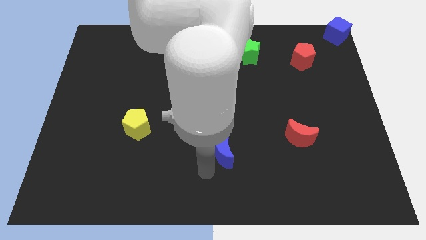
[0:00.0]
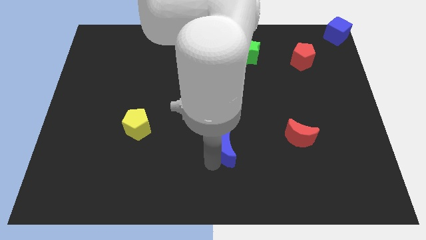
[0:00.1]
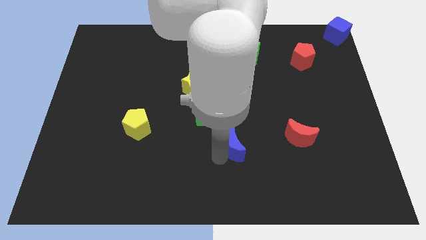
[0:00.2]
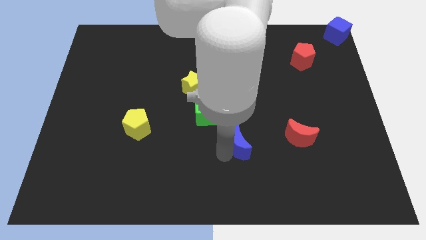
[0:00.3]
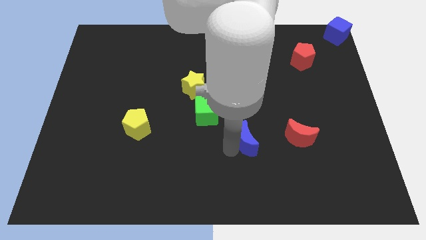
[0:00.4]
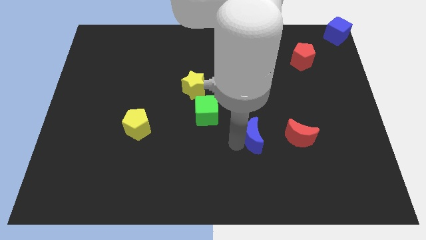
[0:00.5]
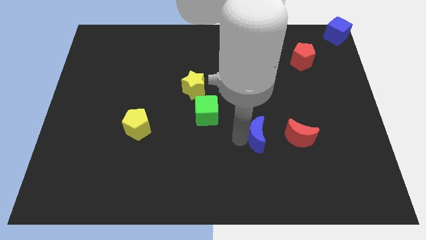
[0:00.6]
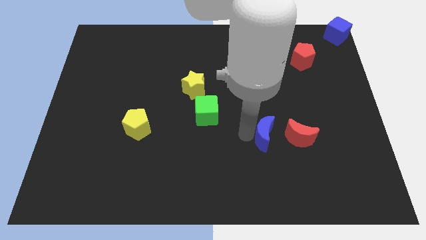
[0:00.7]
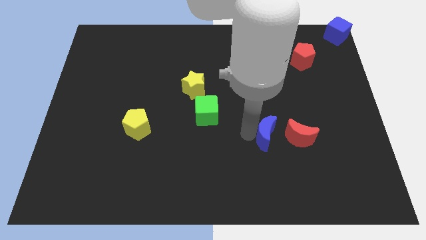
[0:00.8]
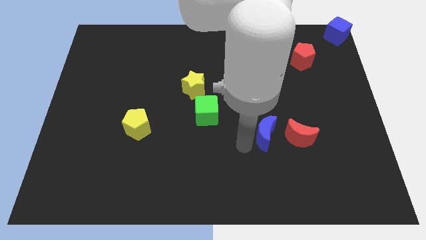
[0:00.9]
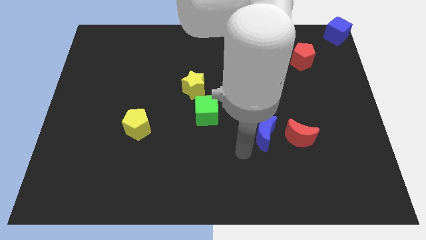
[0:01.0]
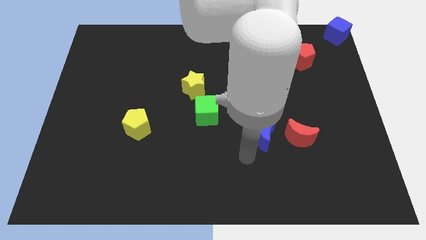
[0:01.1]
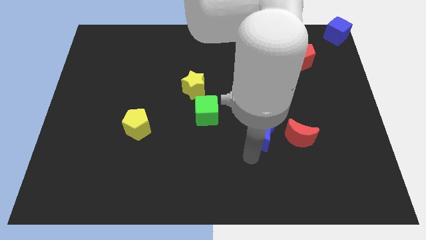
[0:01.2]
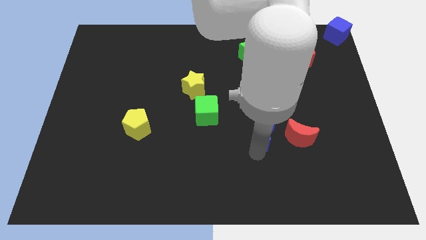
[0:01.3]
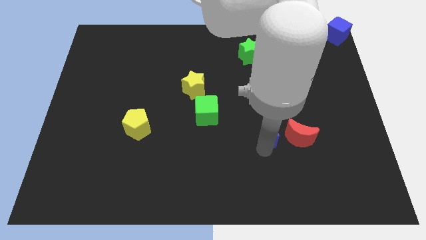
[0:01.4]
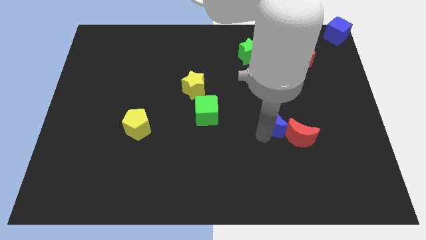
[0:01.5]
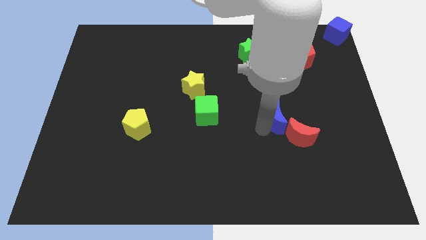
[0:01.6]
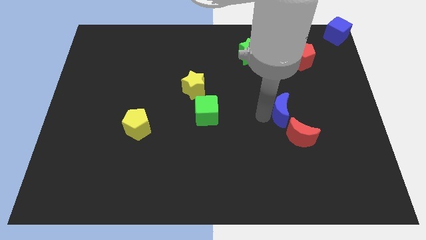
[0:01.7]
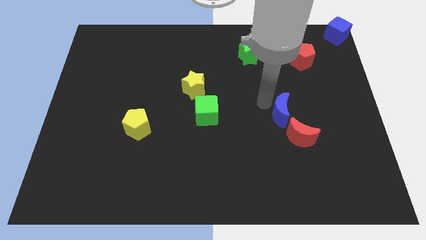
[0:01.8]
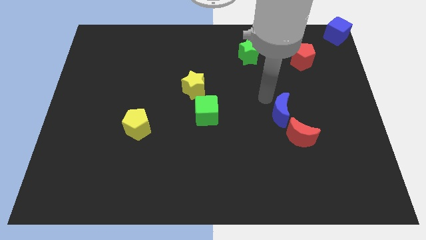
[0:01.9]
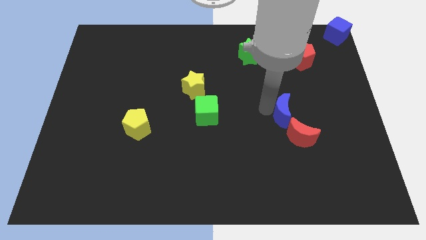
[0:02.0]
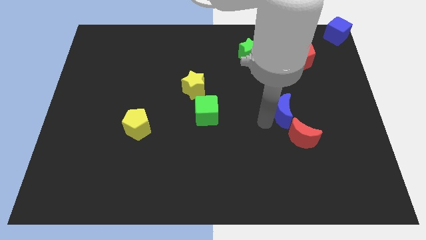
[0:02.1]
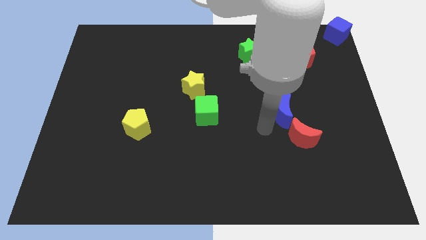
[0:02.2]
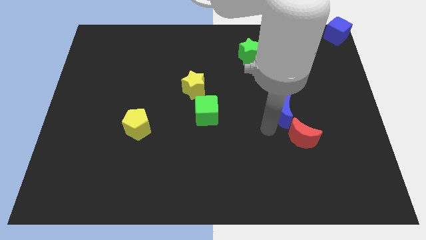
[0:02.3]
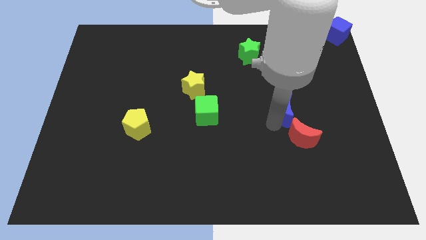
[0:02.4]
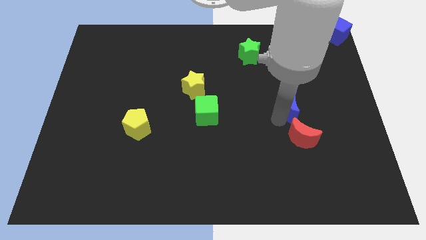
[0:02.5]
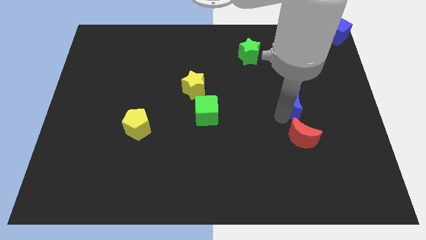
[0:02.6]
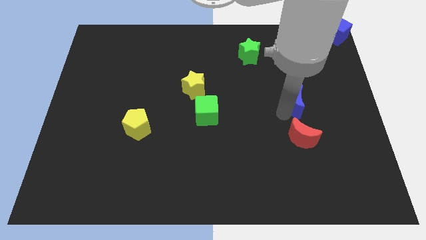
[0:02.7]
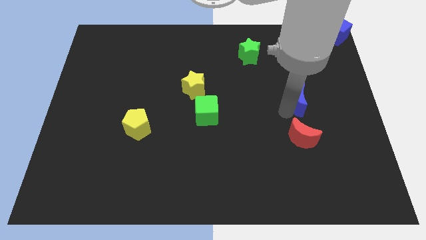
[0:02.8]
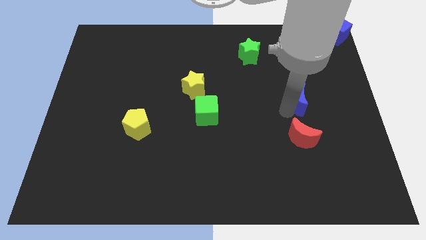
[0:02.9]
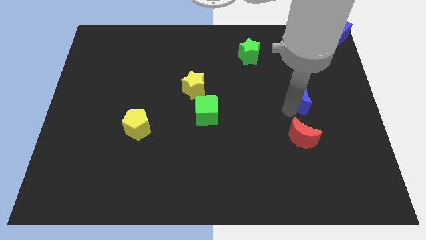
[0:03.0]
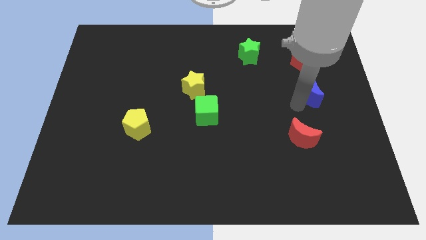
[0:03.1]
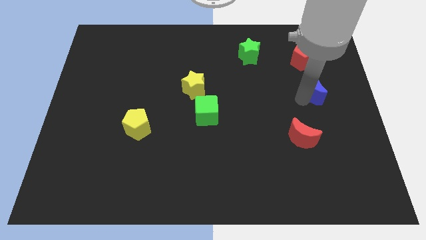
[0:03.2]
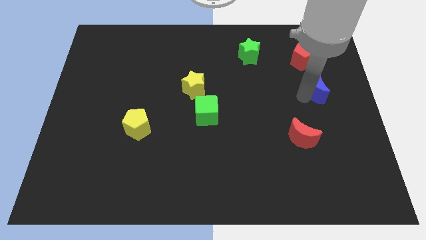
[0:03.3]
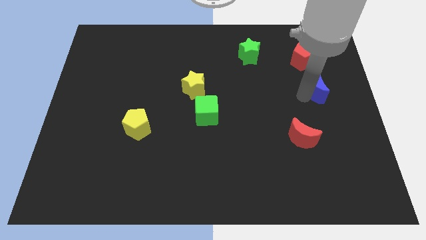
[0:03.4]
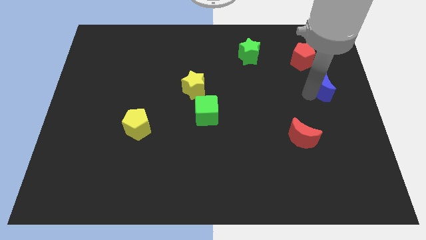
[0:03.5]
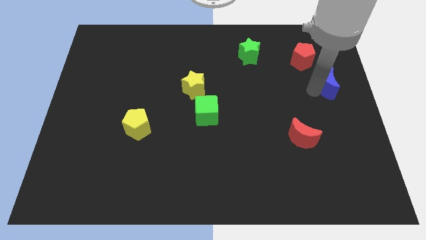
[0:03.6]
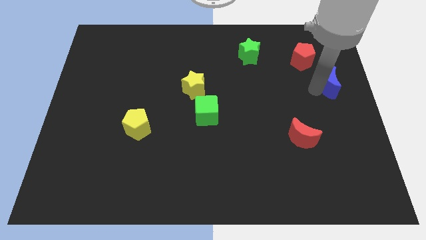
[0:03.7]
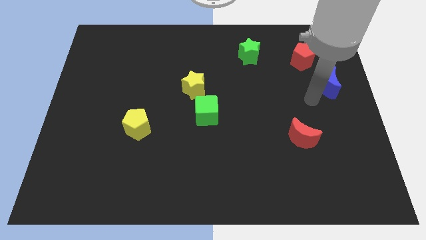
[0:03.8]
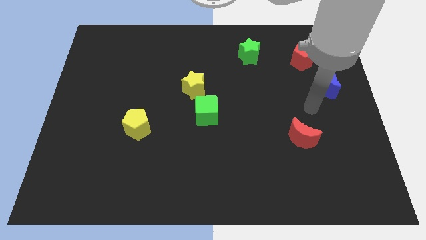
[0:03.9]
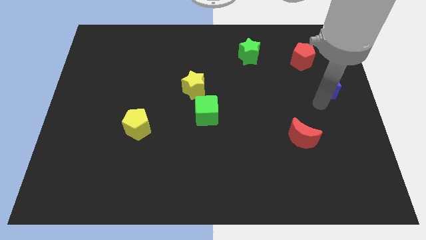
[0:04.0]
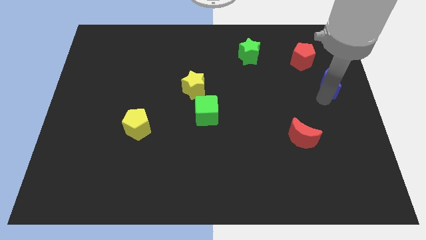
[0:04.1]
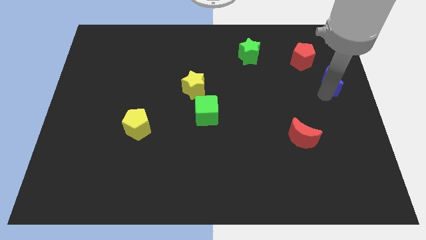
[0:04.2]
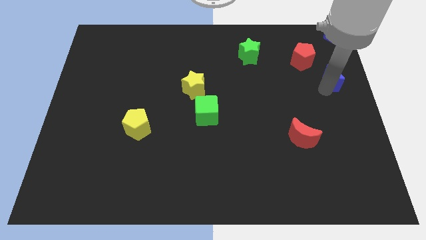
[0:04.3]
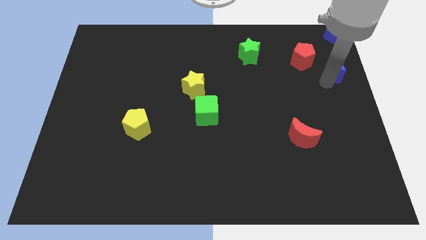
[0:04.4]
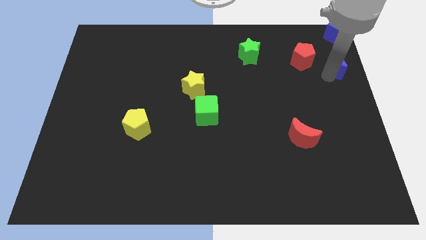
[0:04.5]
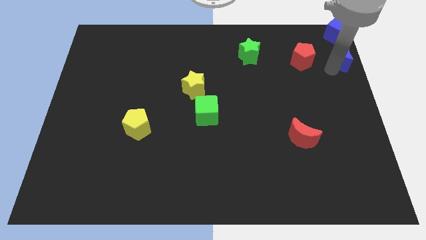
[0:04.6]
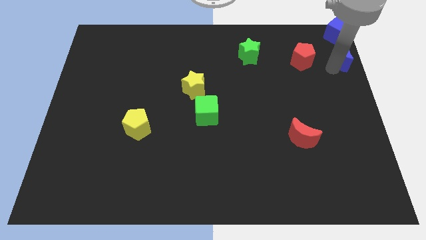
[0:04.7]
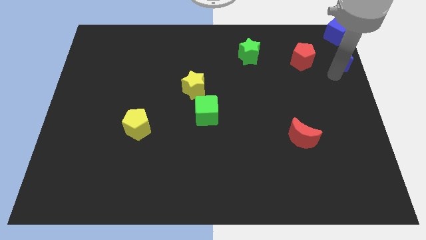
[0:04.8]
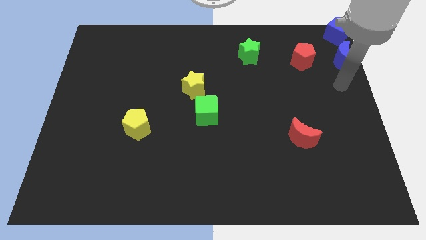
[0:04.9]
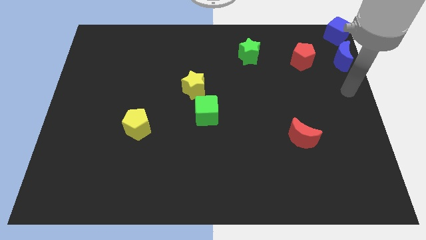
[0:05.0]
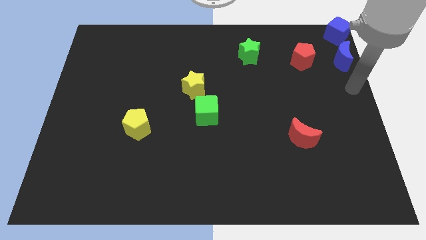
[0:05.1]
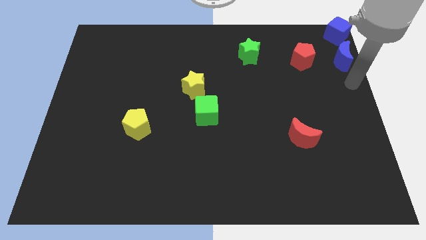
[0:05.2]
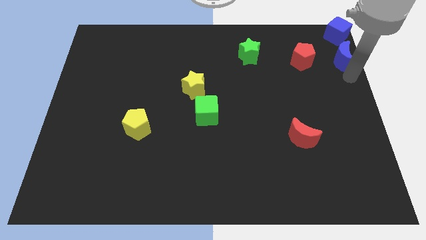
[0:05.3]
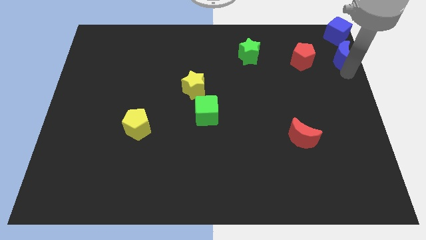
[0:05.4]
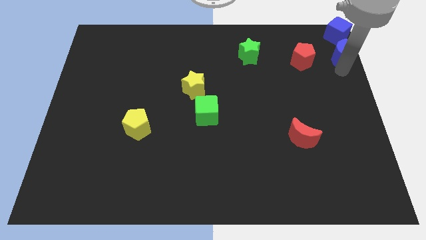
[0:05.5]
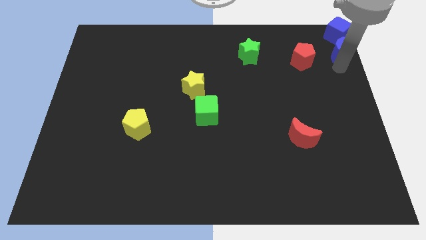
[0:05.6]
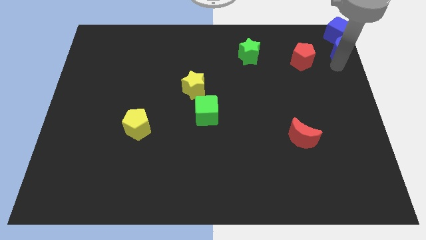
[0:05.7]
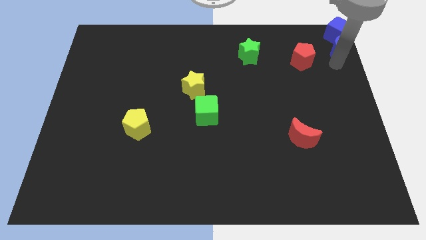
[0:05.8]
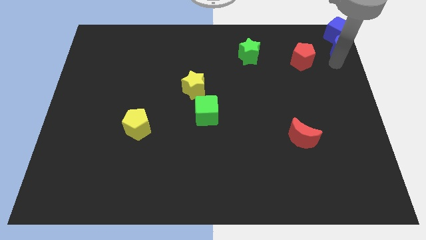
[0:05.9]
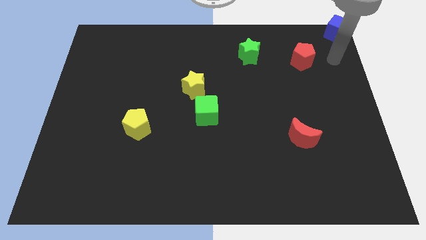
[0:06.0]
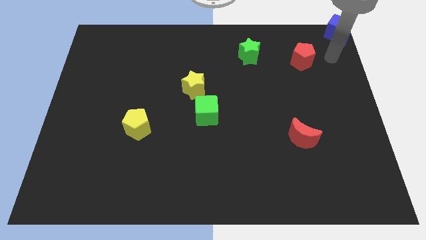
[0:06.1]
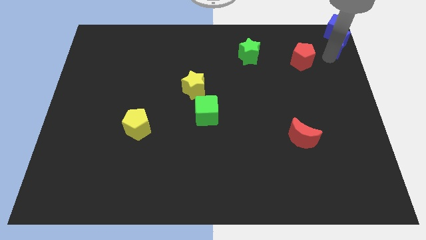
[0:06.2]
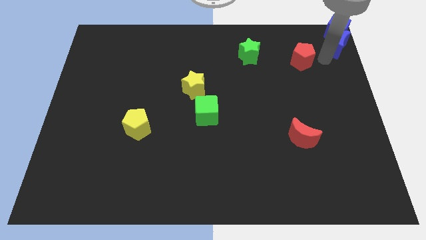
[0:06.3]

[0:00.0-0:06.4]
push the blue crescent into the blue cube

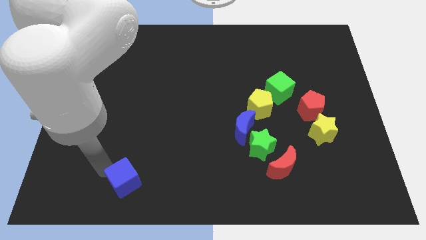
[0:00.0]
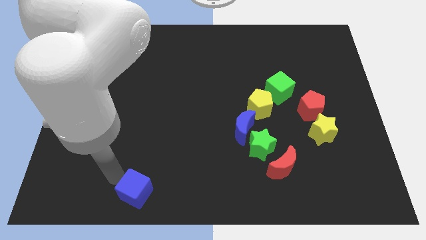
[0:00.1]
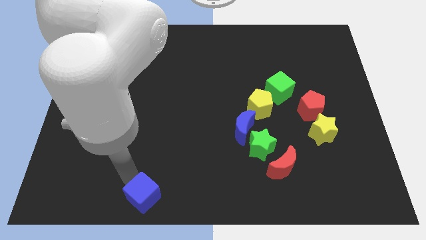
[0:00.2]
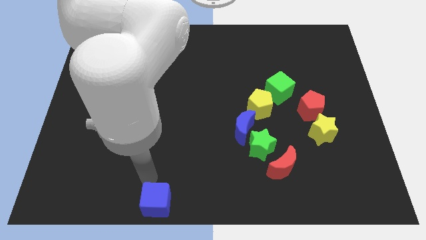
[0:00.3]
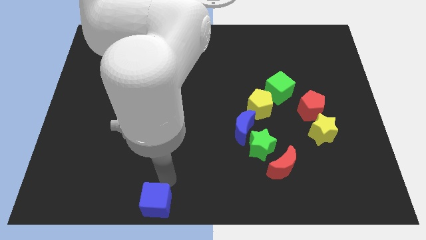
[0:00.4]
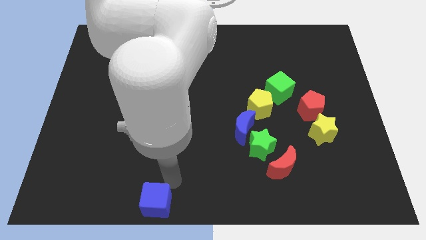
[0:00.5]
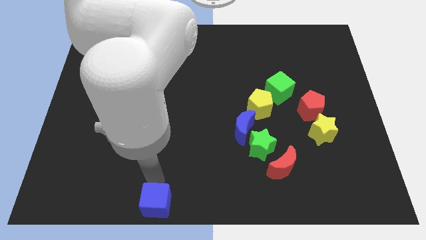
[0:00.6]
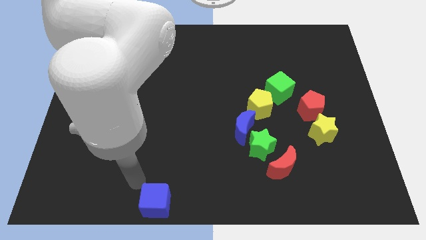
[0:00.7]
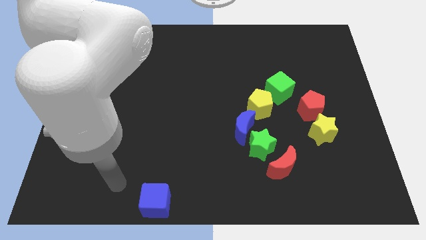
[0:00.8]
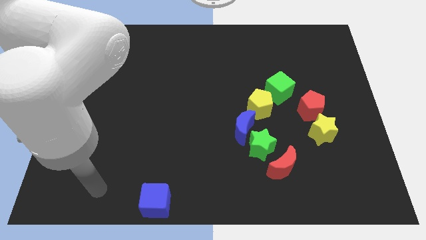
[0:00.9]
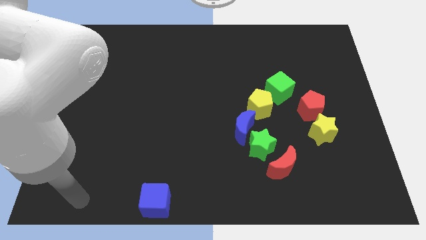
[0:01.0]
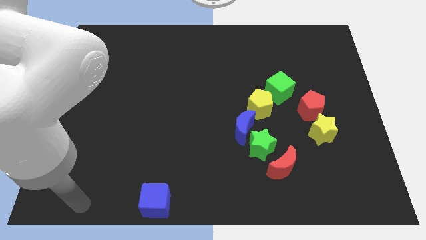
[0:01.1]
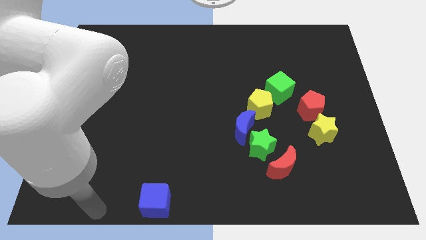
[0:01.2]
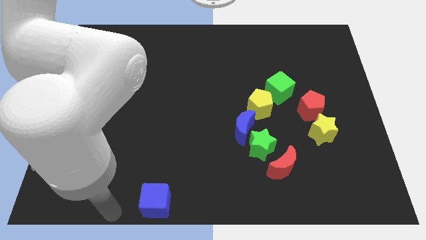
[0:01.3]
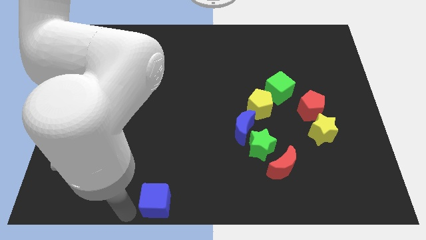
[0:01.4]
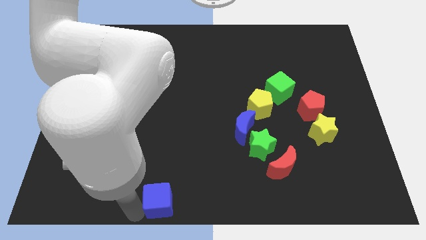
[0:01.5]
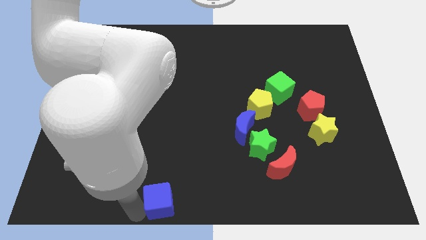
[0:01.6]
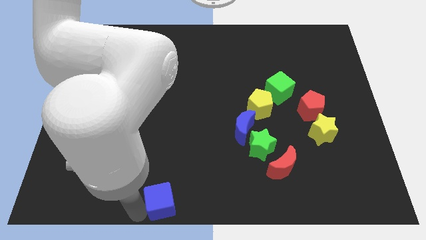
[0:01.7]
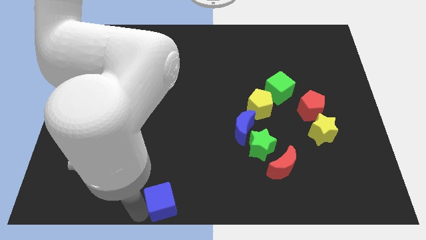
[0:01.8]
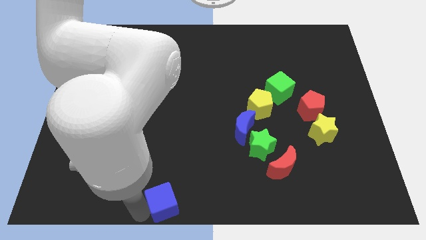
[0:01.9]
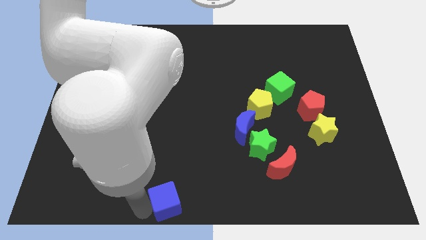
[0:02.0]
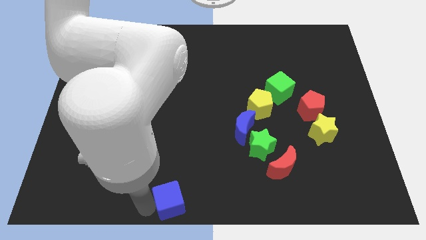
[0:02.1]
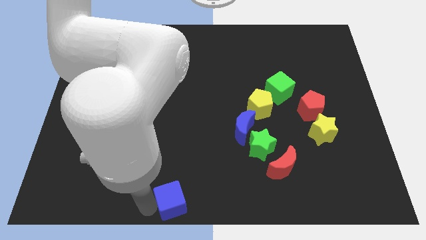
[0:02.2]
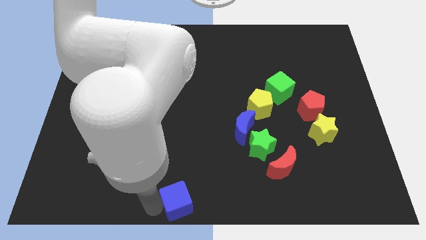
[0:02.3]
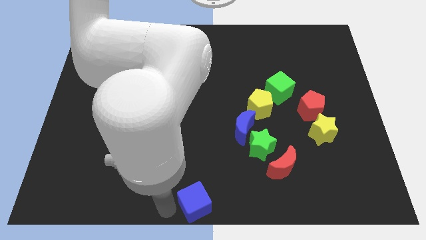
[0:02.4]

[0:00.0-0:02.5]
move the blue cube towards bottom

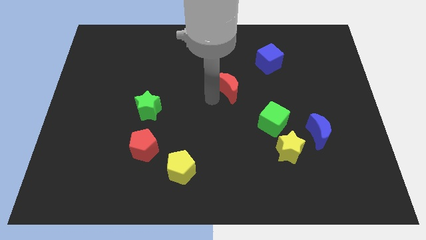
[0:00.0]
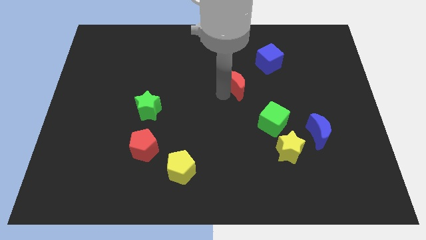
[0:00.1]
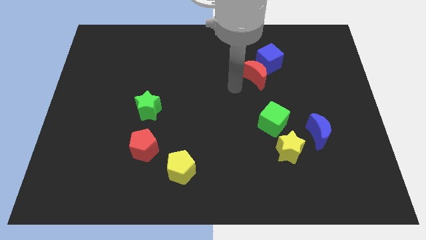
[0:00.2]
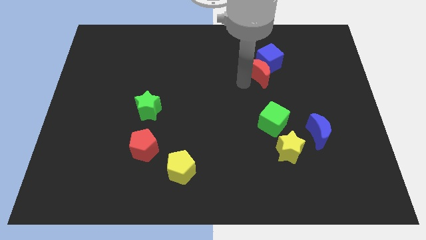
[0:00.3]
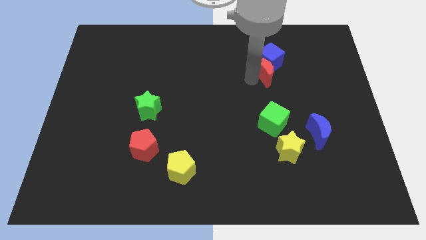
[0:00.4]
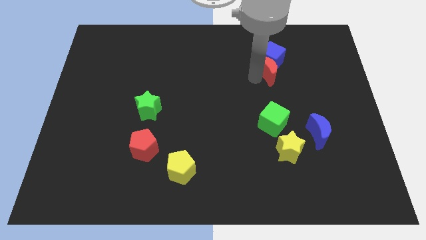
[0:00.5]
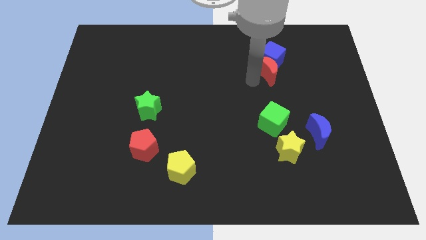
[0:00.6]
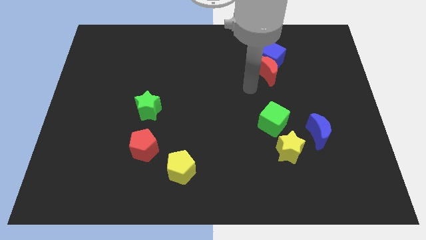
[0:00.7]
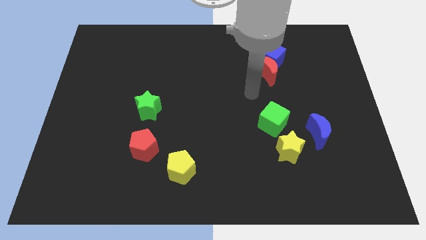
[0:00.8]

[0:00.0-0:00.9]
move the red crescent to the left of the blue cube
